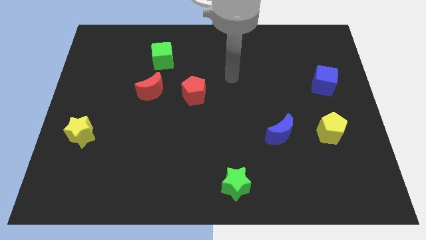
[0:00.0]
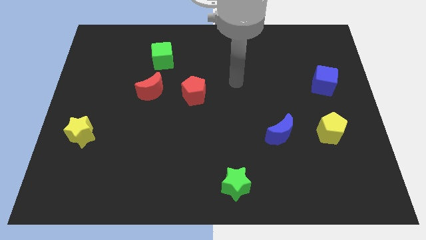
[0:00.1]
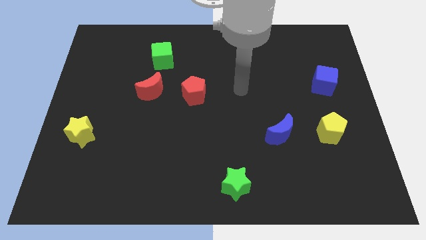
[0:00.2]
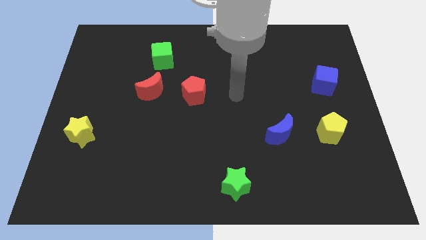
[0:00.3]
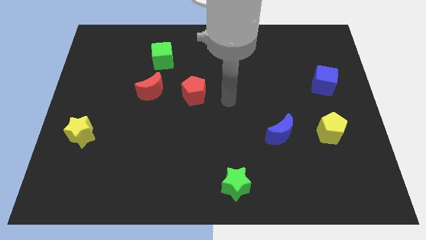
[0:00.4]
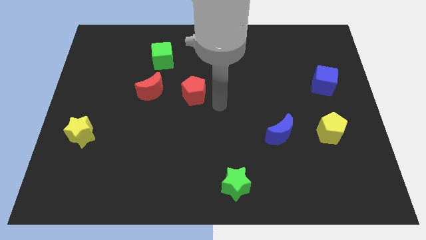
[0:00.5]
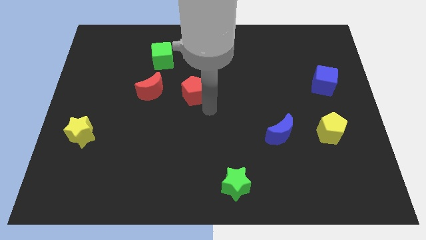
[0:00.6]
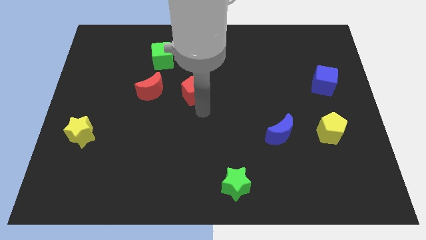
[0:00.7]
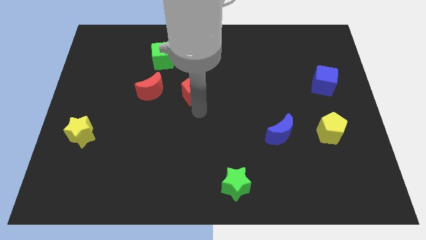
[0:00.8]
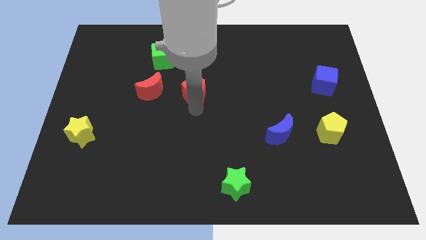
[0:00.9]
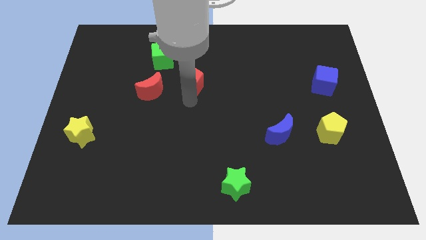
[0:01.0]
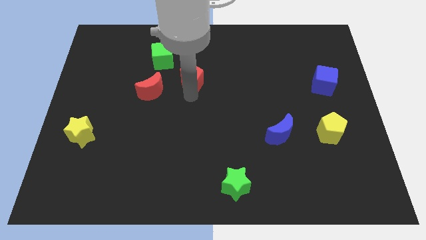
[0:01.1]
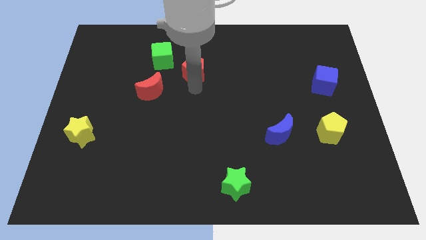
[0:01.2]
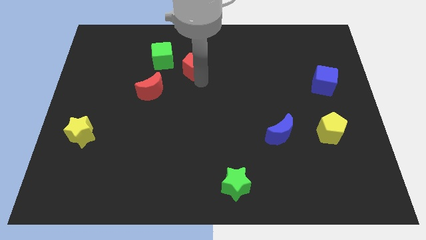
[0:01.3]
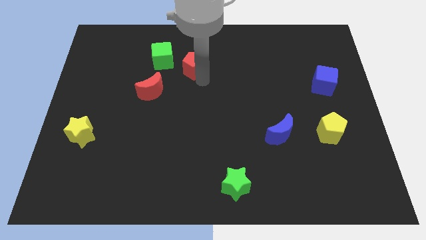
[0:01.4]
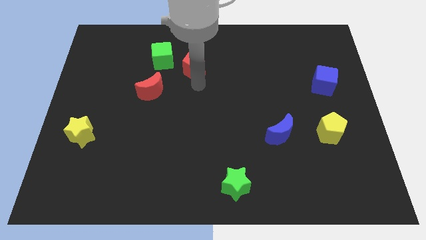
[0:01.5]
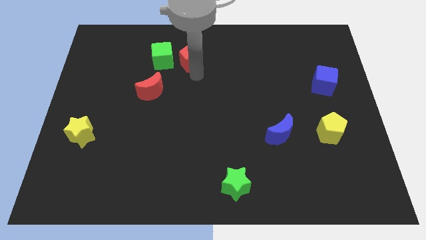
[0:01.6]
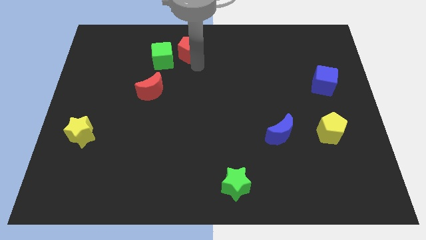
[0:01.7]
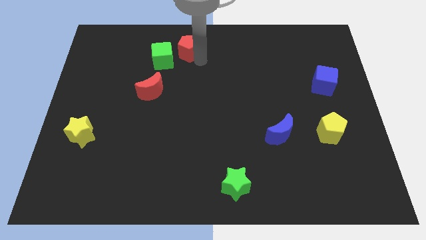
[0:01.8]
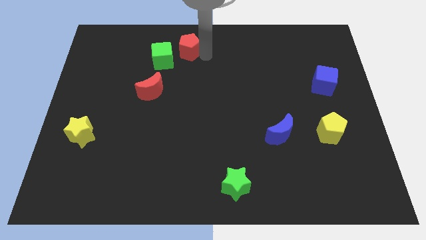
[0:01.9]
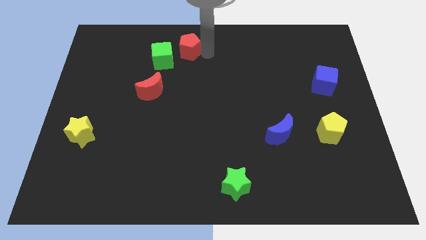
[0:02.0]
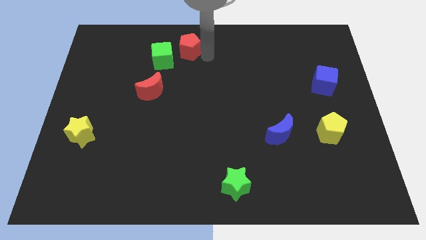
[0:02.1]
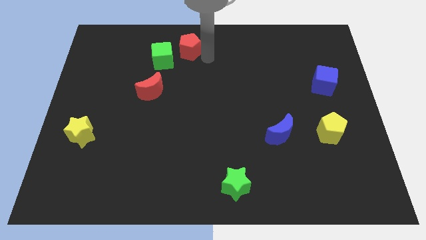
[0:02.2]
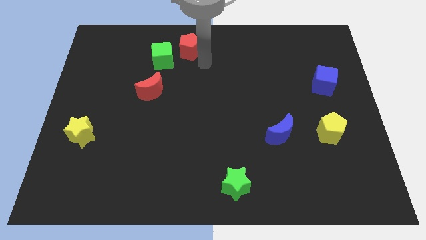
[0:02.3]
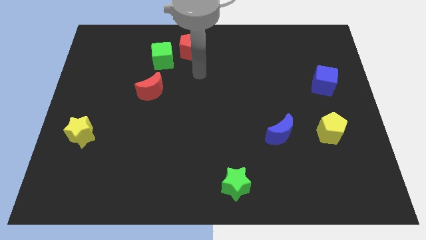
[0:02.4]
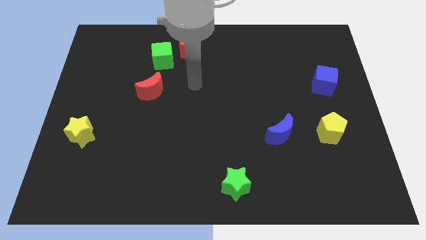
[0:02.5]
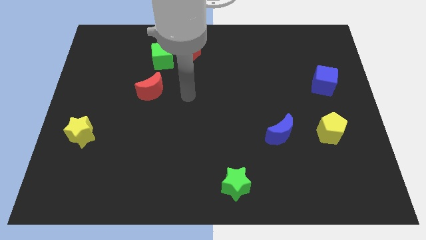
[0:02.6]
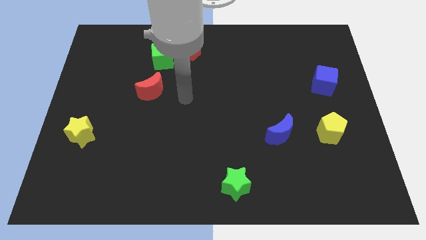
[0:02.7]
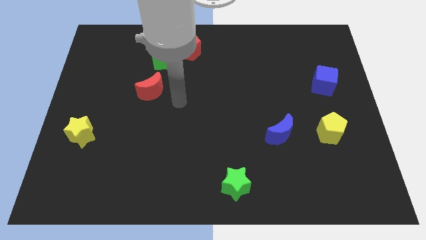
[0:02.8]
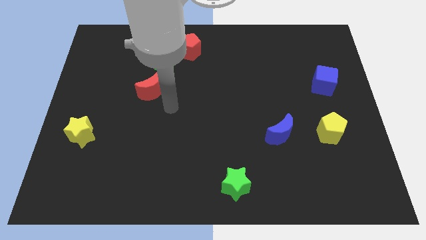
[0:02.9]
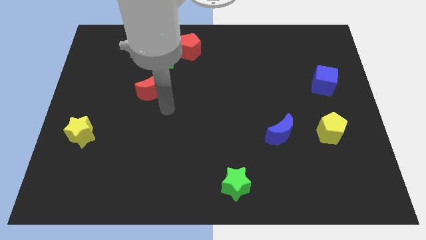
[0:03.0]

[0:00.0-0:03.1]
move the red pentagon towards the top side of the board

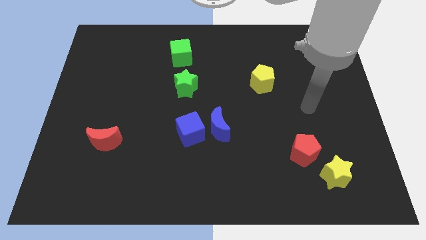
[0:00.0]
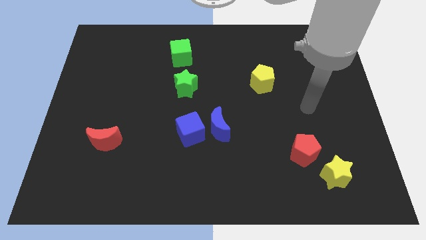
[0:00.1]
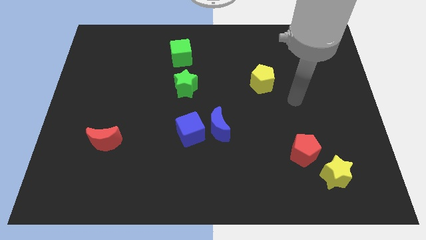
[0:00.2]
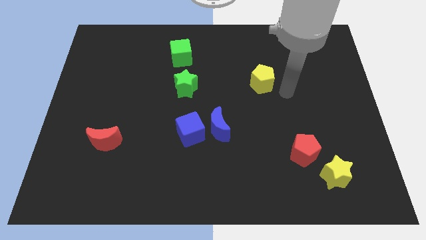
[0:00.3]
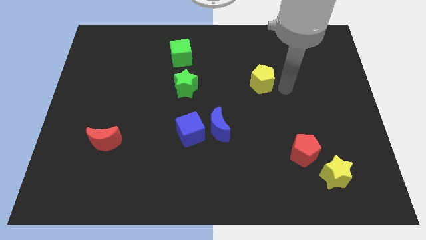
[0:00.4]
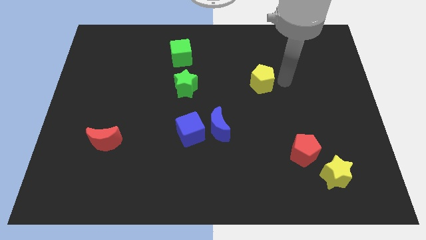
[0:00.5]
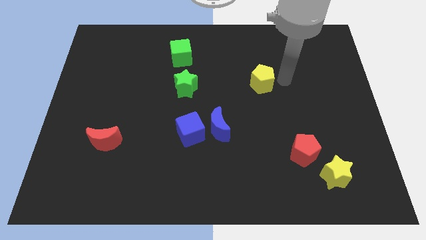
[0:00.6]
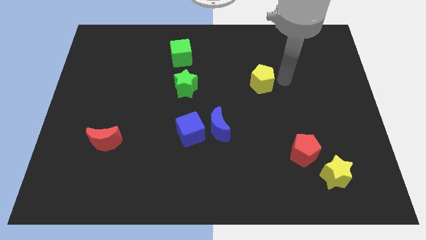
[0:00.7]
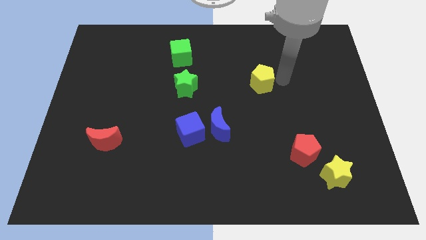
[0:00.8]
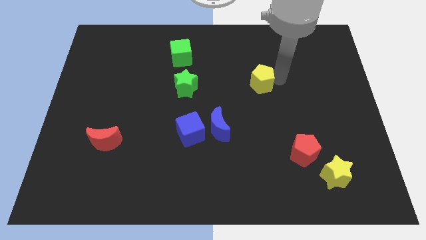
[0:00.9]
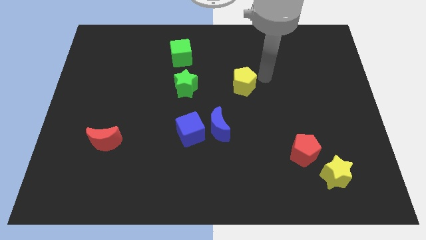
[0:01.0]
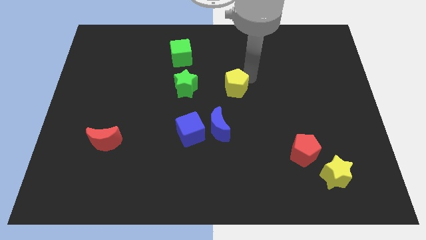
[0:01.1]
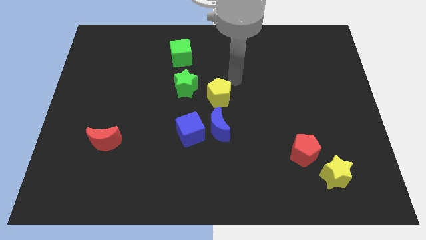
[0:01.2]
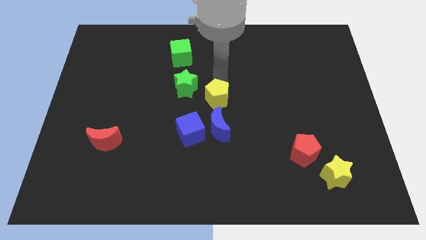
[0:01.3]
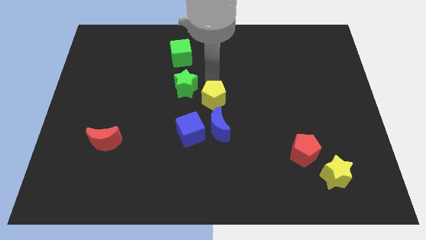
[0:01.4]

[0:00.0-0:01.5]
move the yellow pentagon to the center of the board

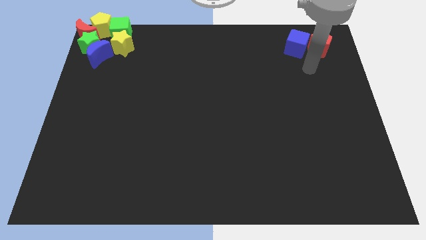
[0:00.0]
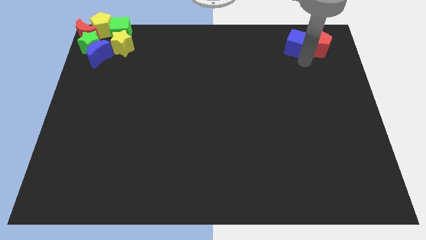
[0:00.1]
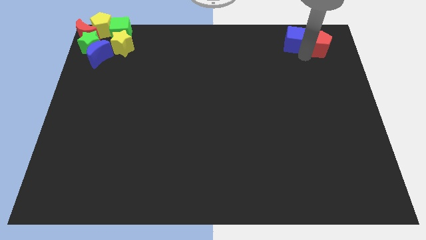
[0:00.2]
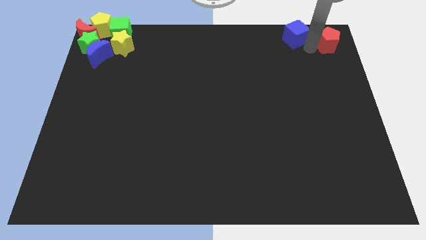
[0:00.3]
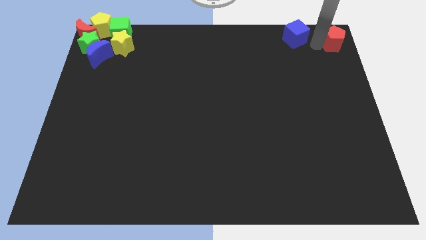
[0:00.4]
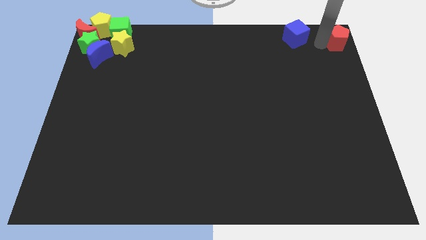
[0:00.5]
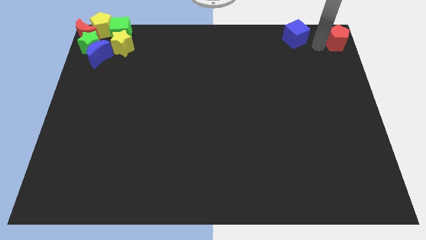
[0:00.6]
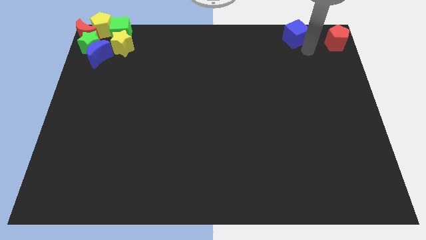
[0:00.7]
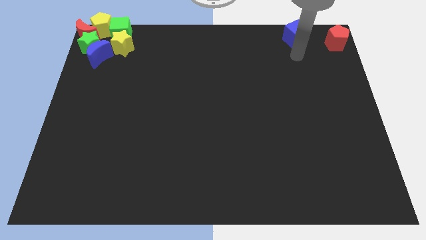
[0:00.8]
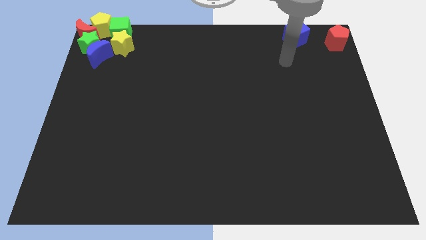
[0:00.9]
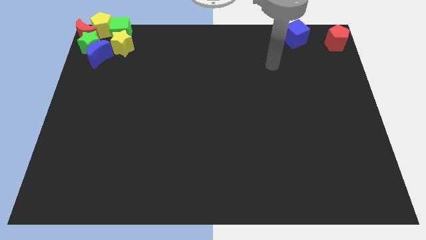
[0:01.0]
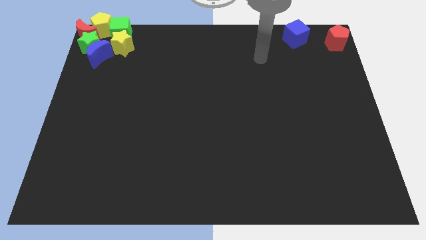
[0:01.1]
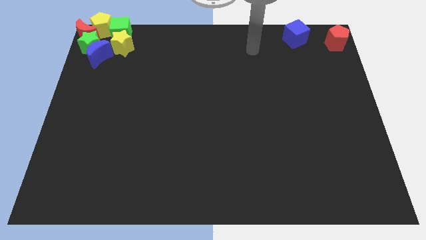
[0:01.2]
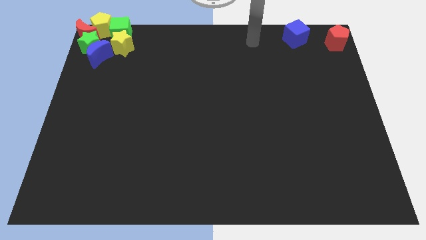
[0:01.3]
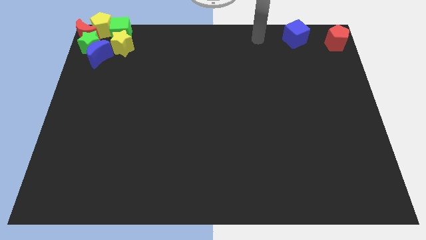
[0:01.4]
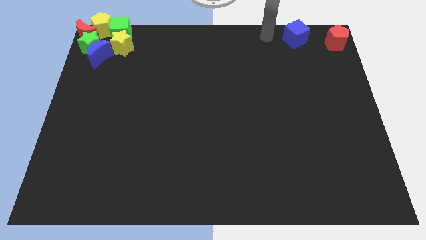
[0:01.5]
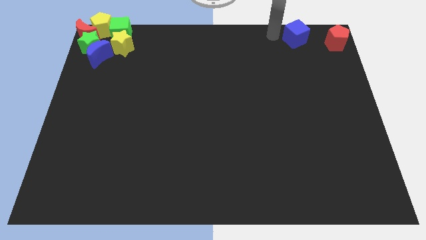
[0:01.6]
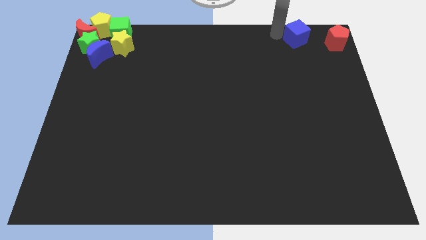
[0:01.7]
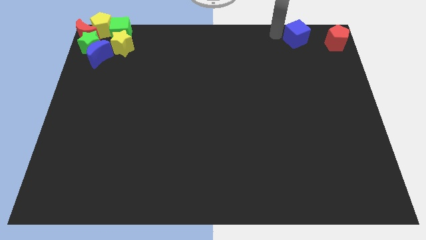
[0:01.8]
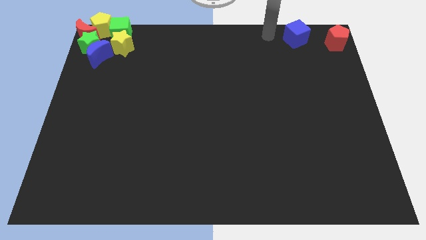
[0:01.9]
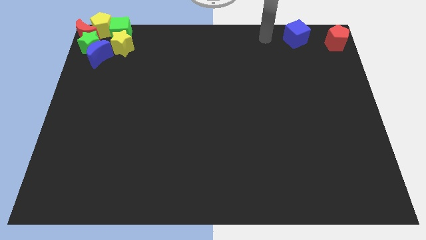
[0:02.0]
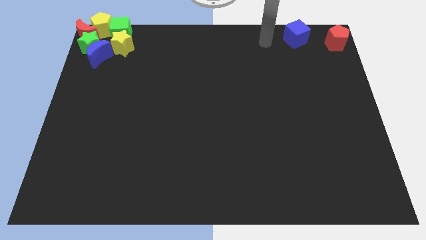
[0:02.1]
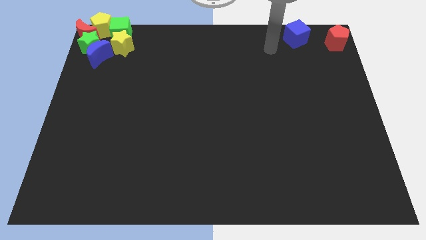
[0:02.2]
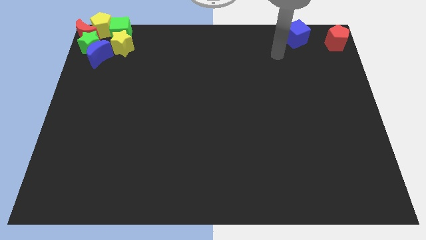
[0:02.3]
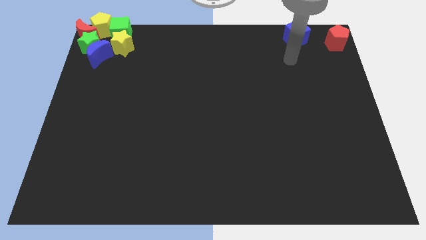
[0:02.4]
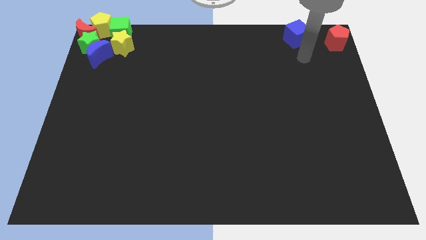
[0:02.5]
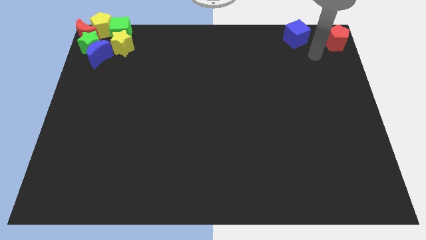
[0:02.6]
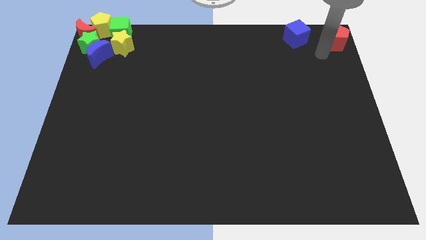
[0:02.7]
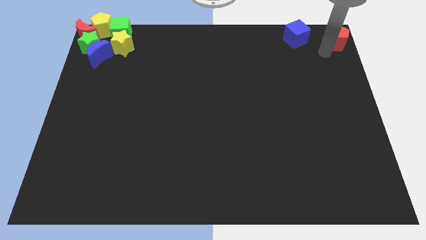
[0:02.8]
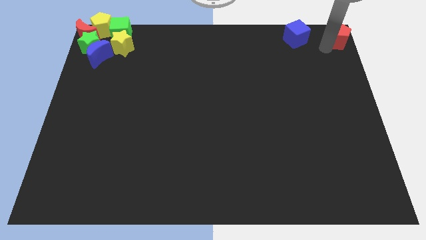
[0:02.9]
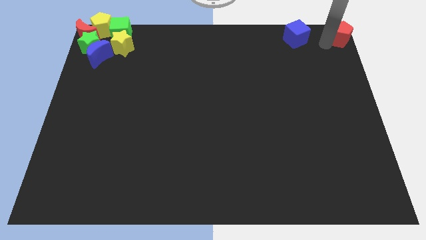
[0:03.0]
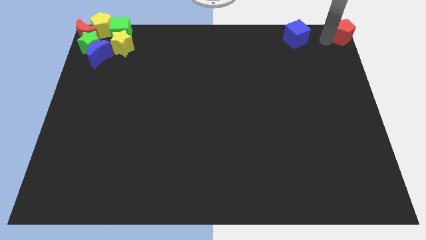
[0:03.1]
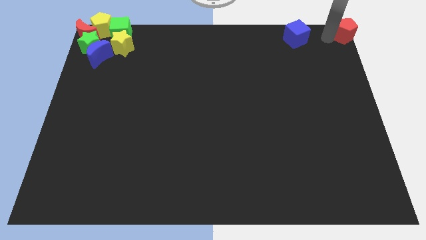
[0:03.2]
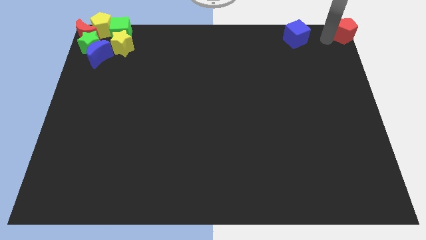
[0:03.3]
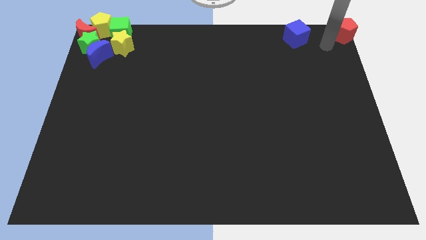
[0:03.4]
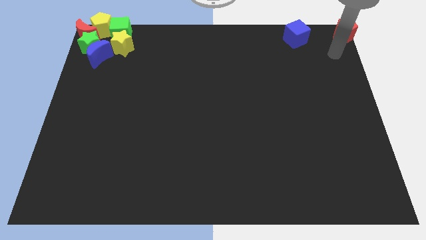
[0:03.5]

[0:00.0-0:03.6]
put the red pentagon at the top right corner of the board

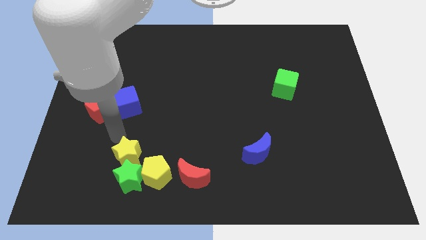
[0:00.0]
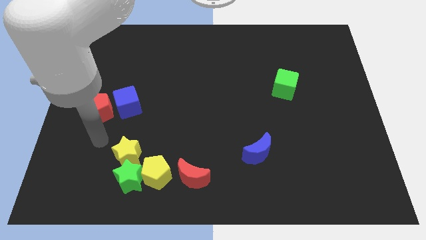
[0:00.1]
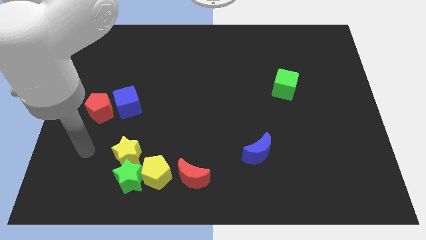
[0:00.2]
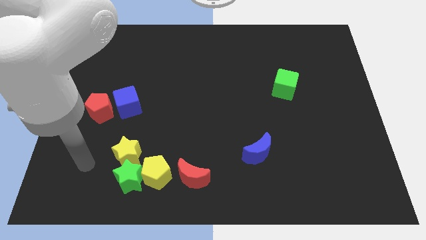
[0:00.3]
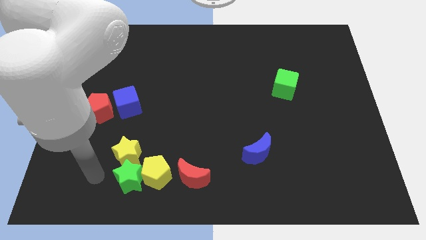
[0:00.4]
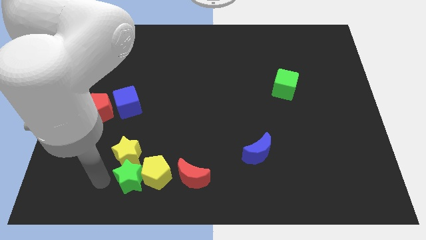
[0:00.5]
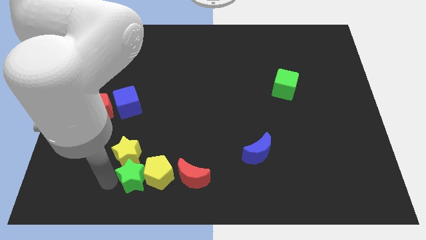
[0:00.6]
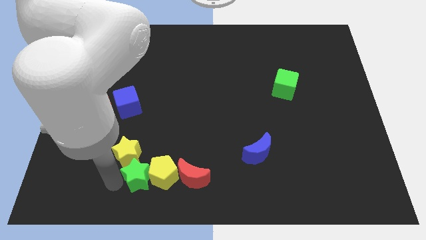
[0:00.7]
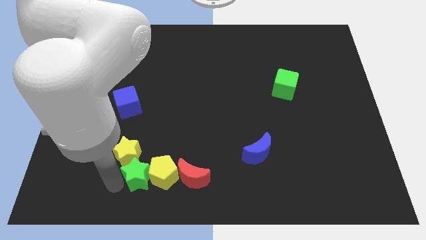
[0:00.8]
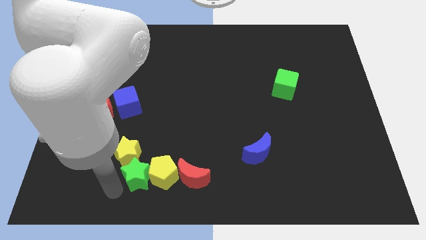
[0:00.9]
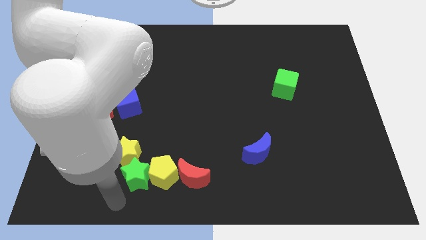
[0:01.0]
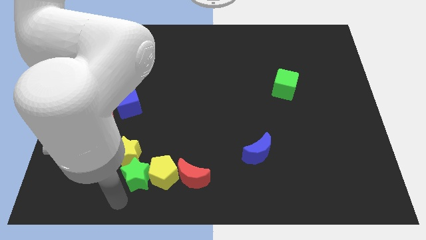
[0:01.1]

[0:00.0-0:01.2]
push the green star to the right side slightly
